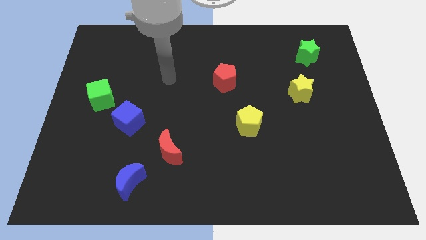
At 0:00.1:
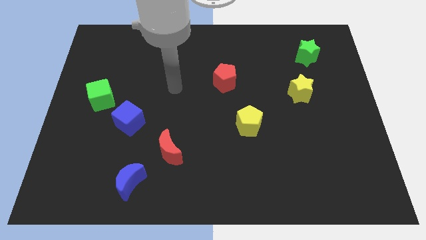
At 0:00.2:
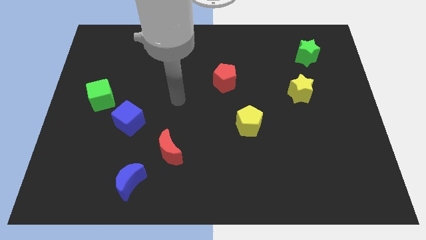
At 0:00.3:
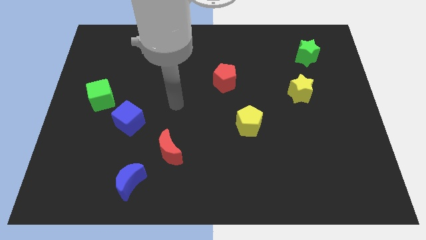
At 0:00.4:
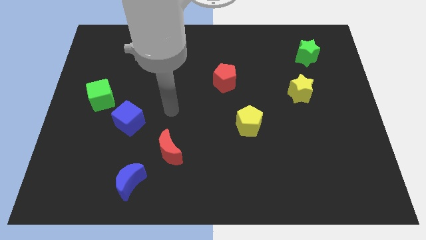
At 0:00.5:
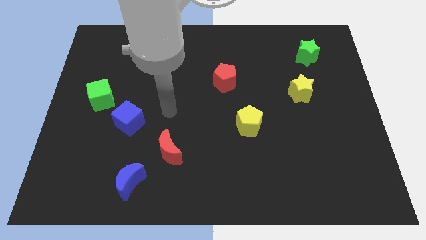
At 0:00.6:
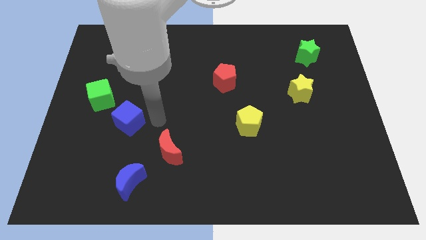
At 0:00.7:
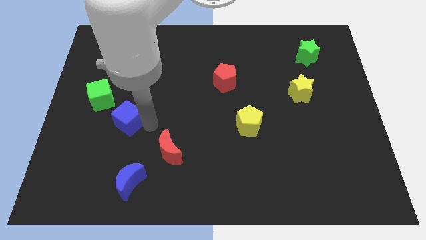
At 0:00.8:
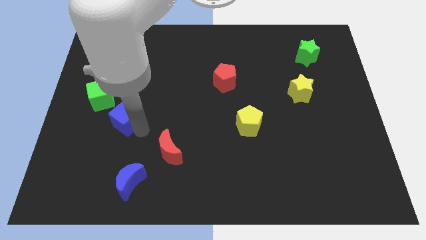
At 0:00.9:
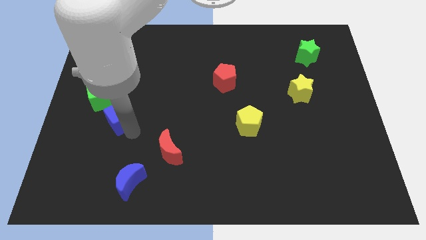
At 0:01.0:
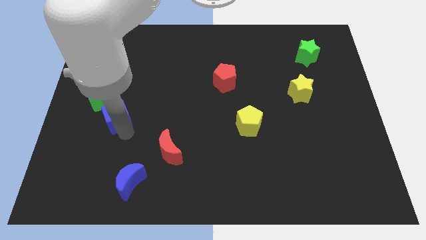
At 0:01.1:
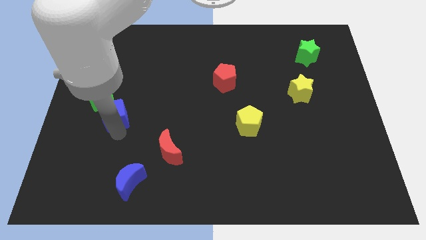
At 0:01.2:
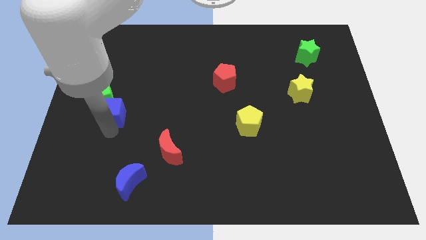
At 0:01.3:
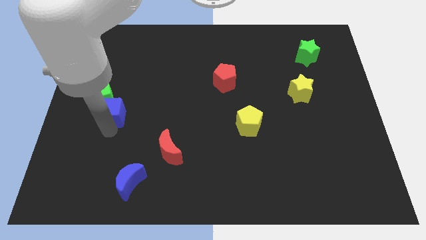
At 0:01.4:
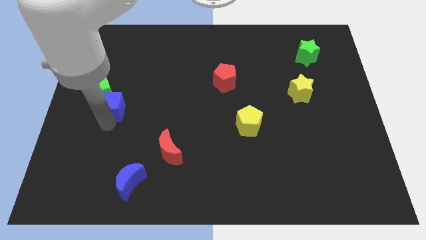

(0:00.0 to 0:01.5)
move the blue cube below the green cube

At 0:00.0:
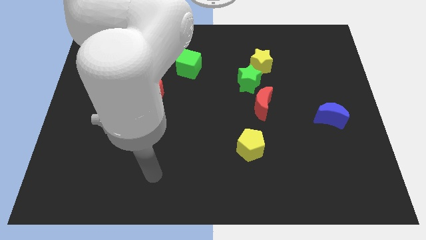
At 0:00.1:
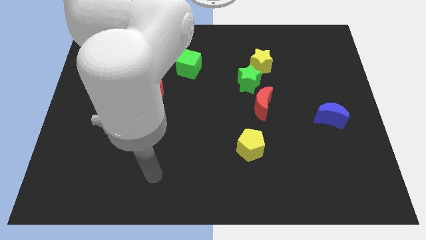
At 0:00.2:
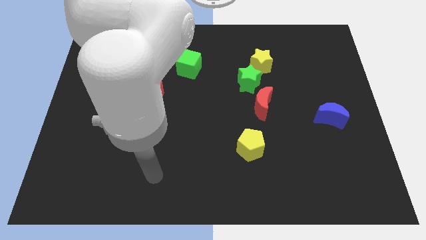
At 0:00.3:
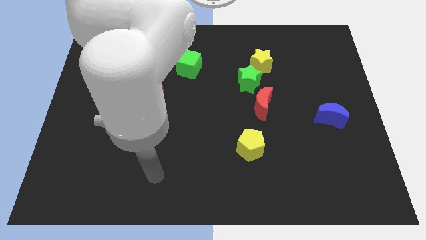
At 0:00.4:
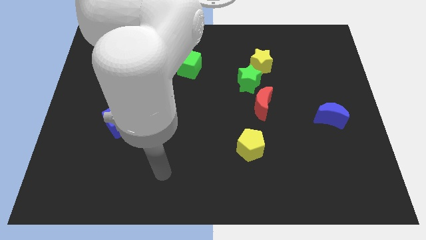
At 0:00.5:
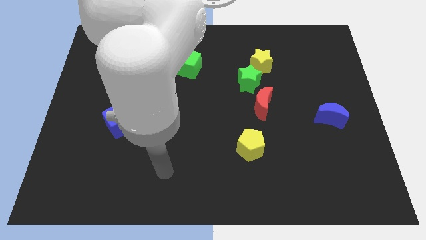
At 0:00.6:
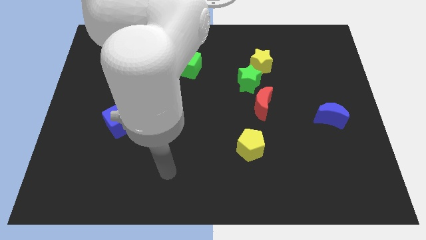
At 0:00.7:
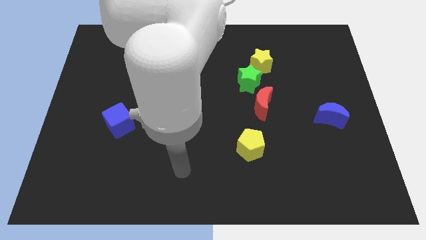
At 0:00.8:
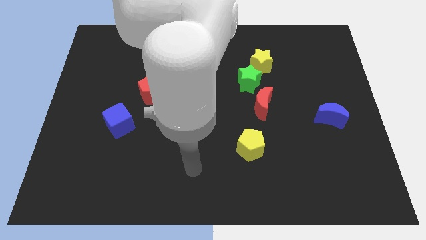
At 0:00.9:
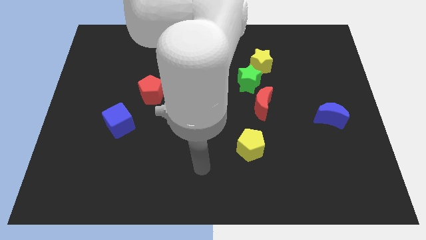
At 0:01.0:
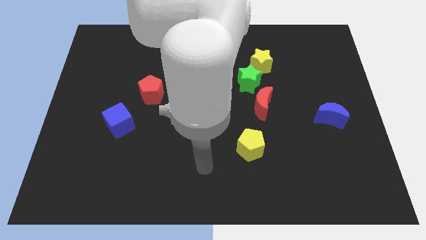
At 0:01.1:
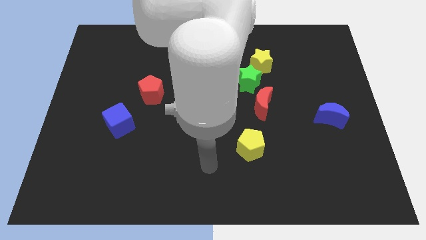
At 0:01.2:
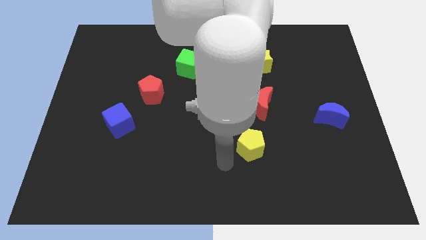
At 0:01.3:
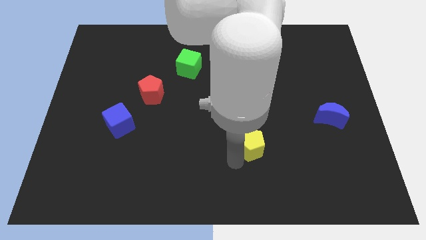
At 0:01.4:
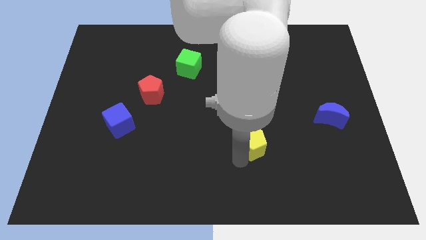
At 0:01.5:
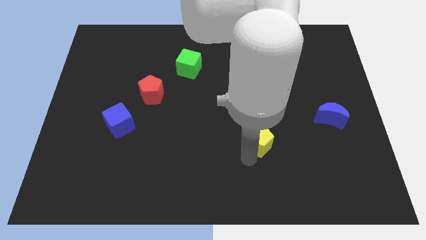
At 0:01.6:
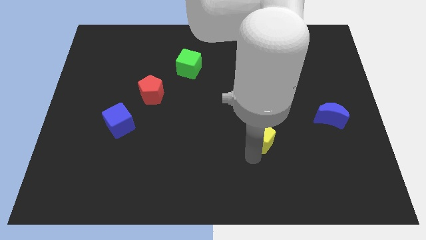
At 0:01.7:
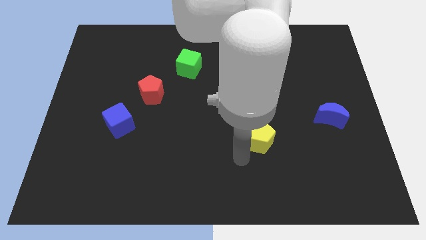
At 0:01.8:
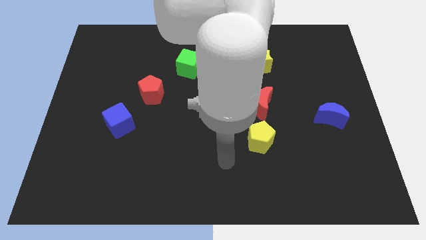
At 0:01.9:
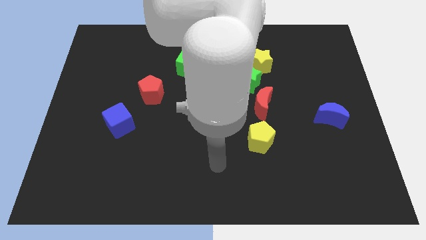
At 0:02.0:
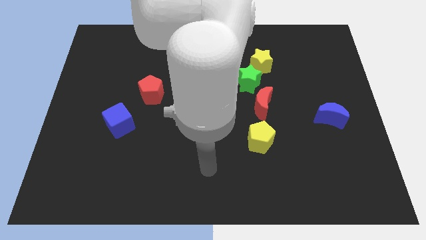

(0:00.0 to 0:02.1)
move the yellow pentagon close to the red moon

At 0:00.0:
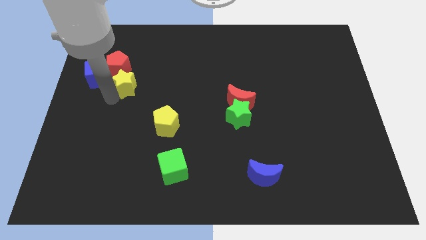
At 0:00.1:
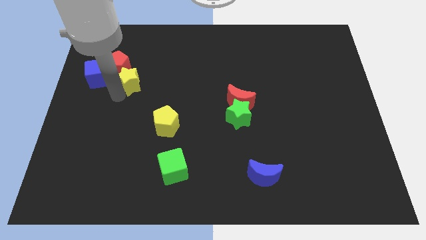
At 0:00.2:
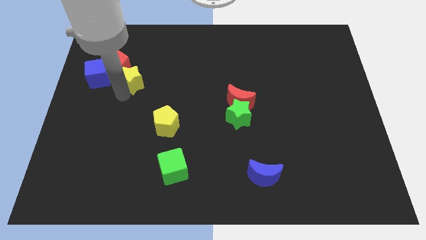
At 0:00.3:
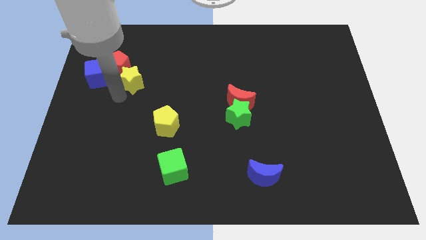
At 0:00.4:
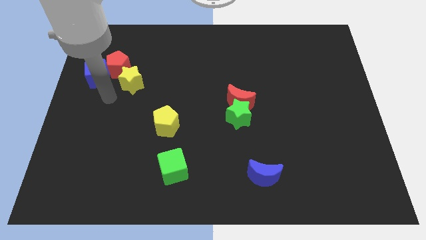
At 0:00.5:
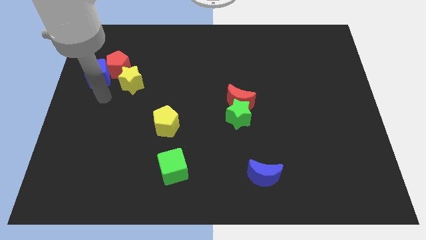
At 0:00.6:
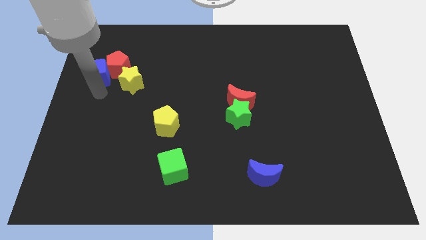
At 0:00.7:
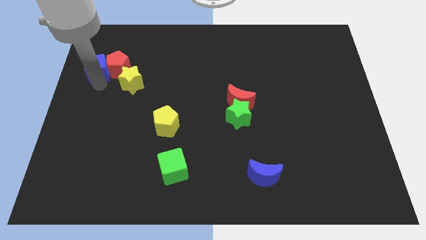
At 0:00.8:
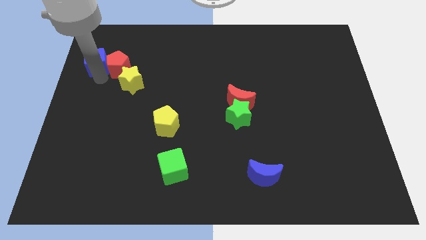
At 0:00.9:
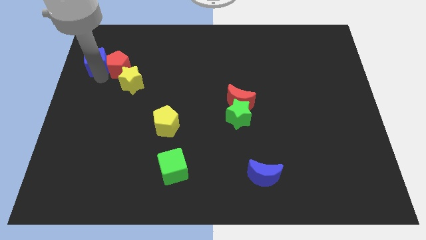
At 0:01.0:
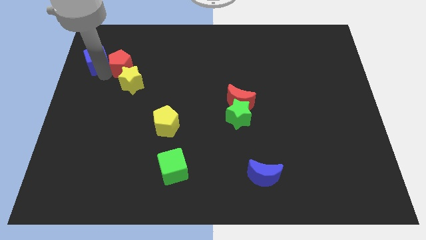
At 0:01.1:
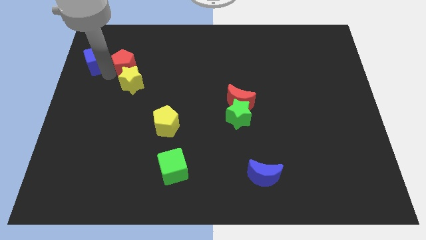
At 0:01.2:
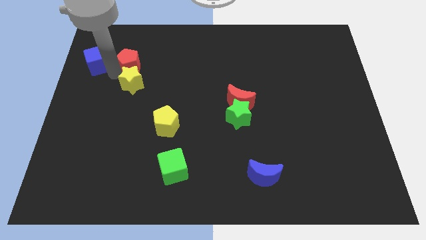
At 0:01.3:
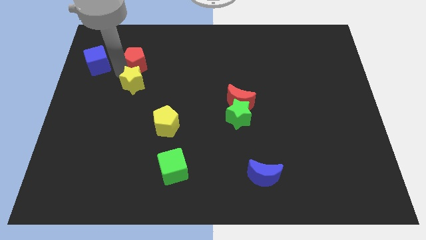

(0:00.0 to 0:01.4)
slide the red pentagon to the right of the blue cube

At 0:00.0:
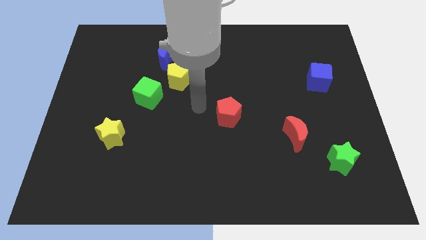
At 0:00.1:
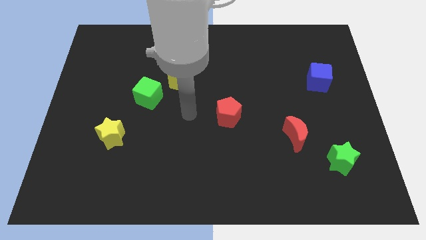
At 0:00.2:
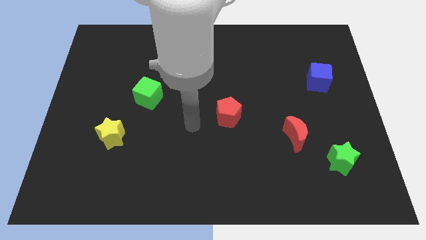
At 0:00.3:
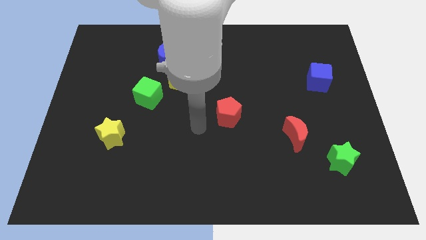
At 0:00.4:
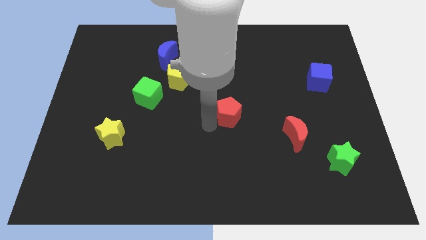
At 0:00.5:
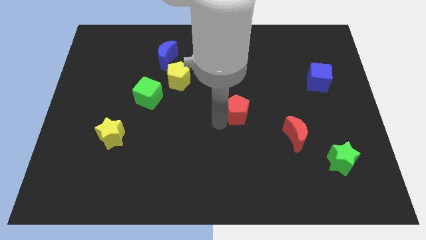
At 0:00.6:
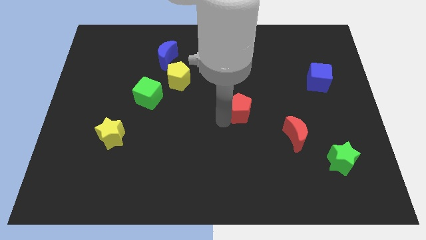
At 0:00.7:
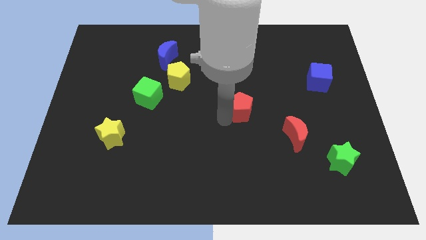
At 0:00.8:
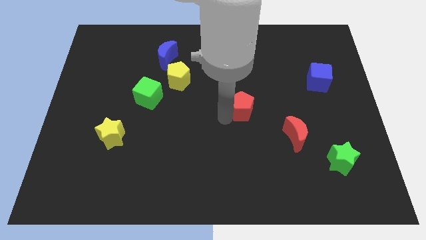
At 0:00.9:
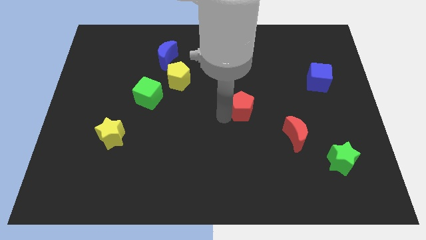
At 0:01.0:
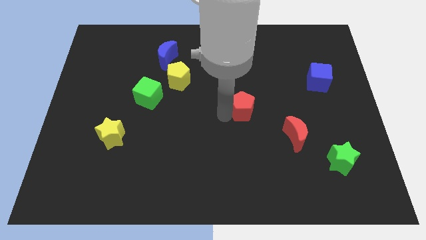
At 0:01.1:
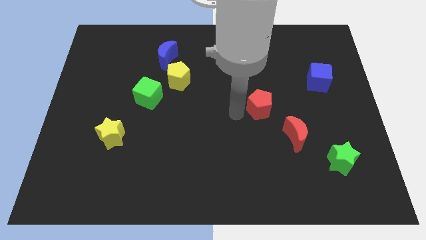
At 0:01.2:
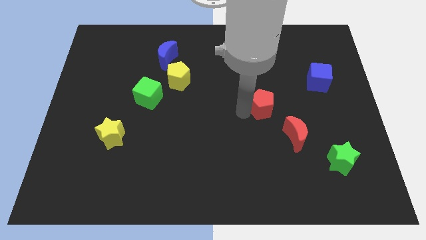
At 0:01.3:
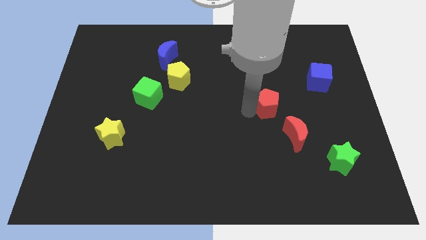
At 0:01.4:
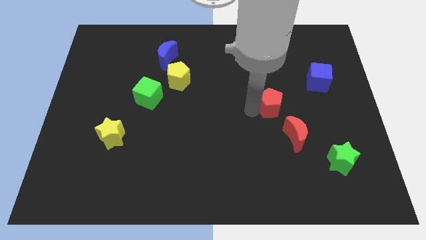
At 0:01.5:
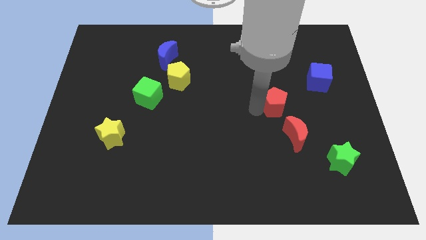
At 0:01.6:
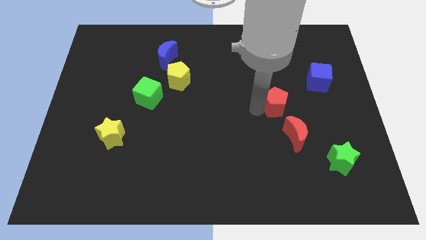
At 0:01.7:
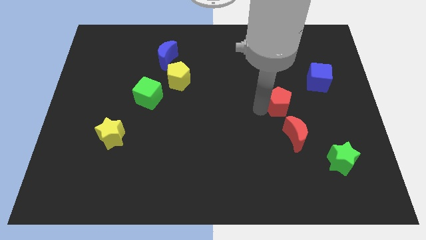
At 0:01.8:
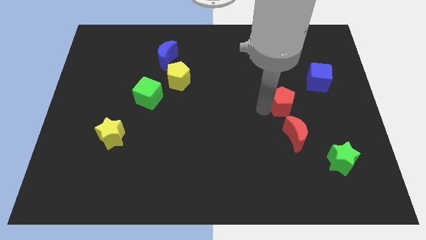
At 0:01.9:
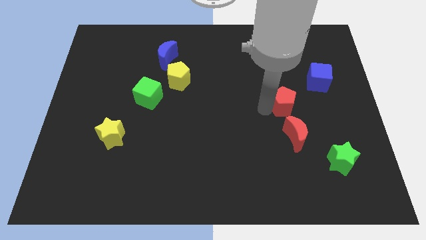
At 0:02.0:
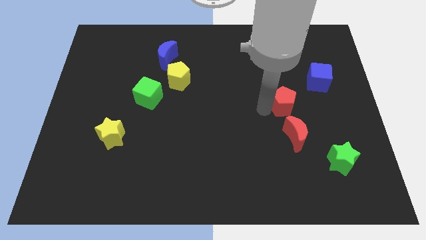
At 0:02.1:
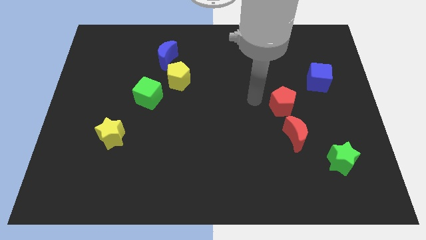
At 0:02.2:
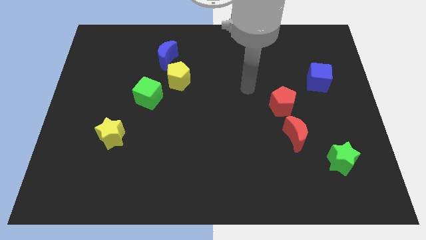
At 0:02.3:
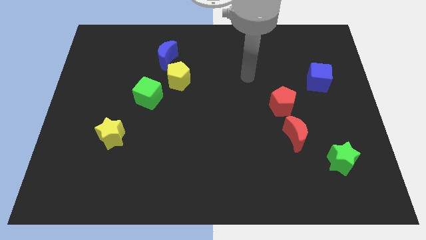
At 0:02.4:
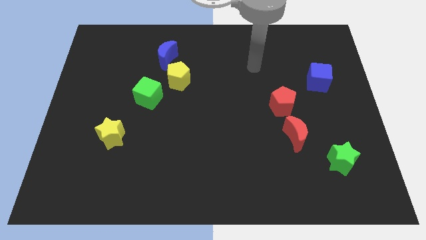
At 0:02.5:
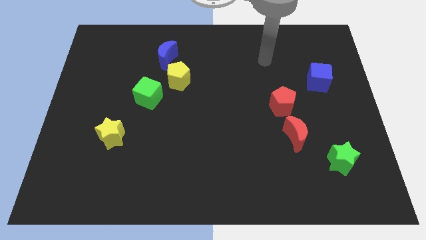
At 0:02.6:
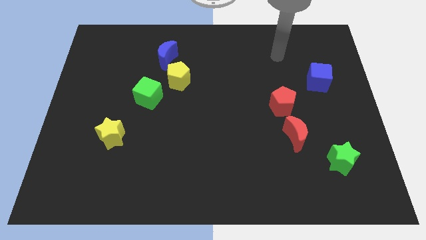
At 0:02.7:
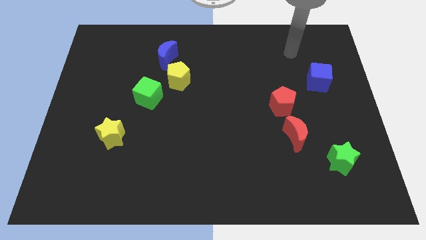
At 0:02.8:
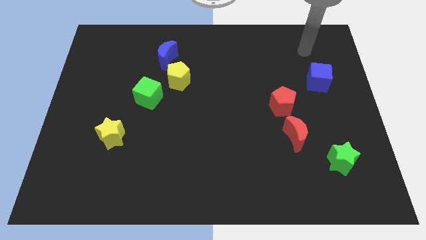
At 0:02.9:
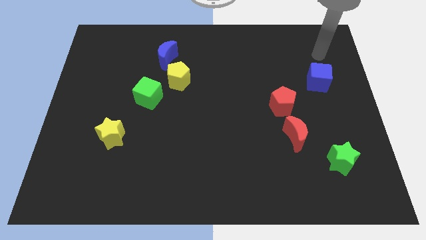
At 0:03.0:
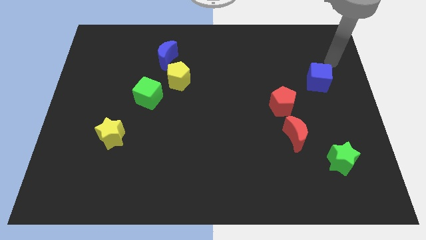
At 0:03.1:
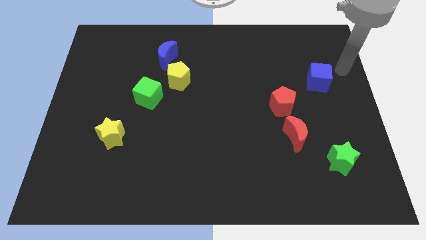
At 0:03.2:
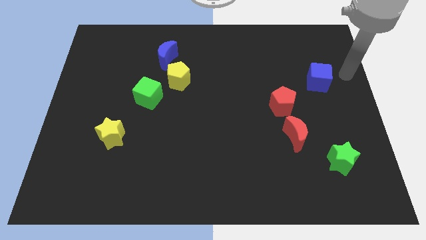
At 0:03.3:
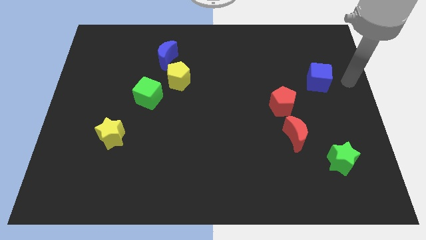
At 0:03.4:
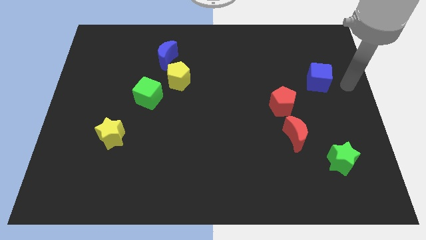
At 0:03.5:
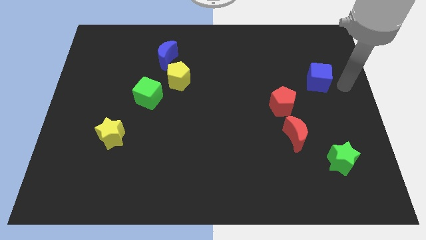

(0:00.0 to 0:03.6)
put red pentagon vertically above the red moon

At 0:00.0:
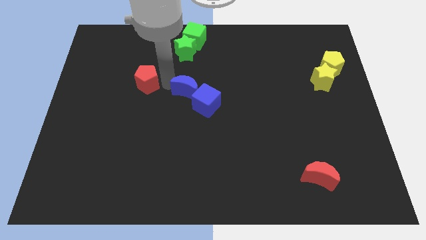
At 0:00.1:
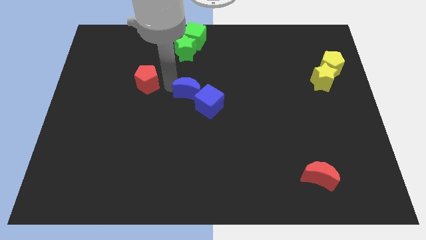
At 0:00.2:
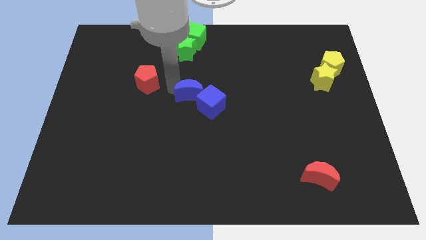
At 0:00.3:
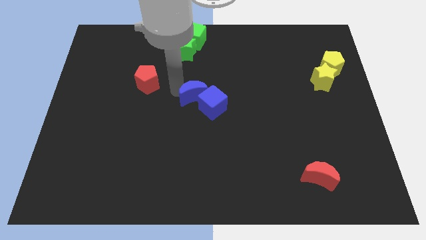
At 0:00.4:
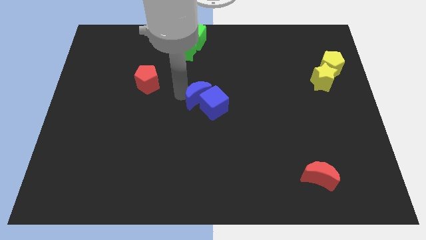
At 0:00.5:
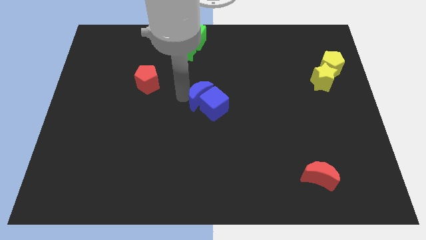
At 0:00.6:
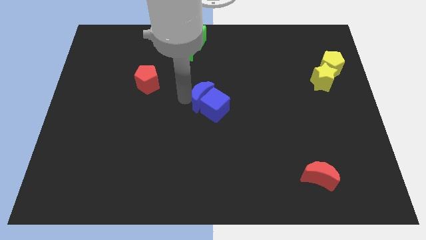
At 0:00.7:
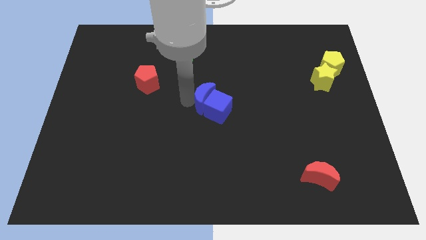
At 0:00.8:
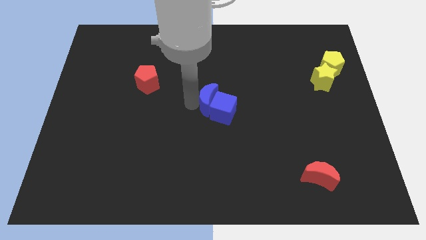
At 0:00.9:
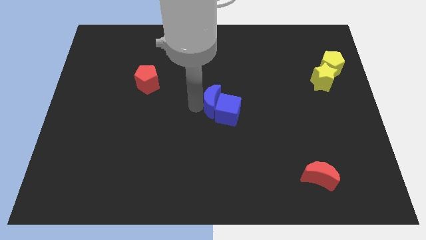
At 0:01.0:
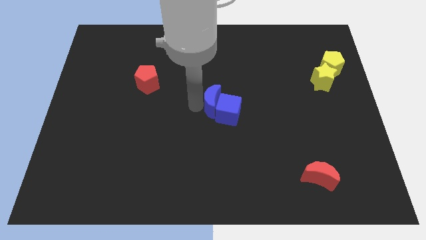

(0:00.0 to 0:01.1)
push the blue moon into the blue block to the center
